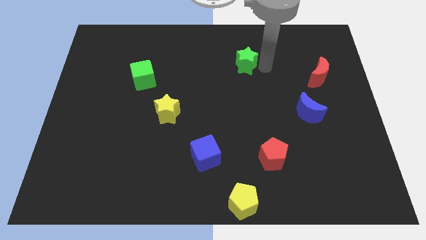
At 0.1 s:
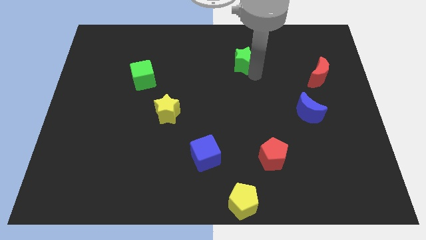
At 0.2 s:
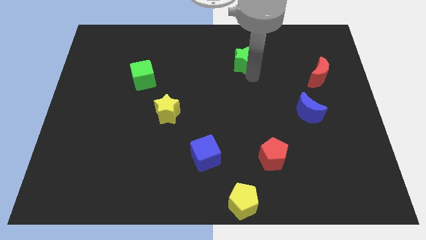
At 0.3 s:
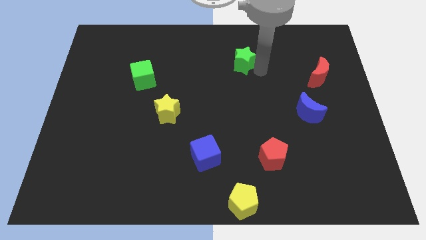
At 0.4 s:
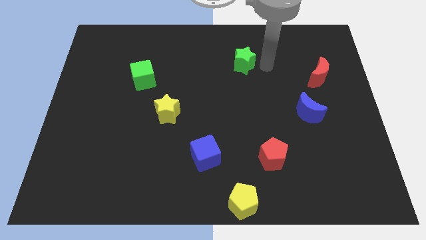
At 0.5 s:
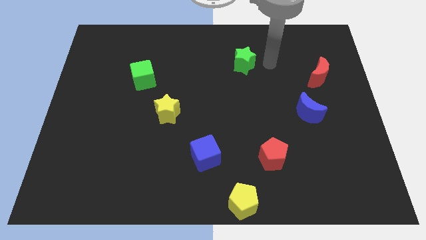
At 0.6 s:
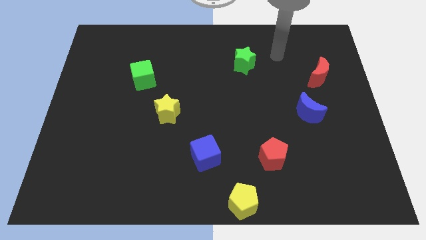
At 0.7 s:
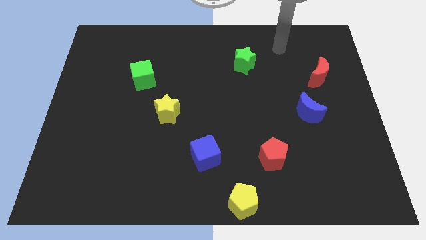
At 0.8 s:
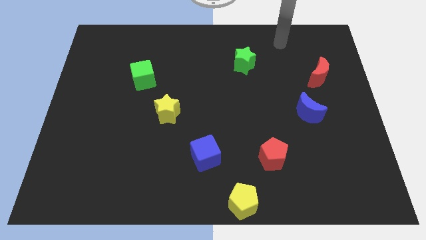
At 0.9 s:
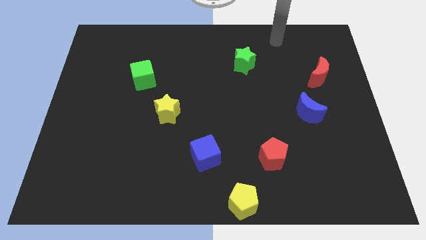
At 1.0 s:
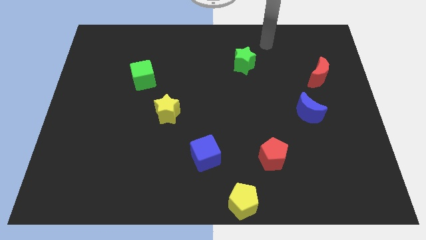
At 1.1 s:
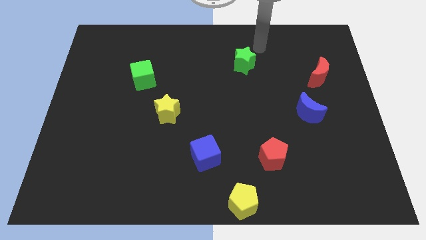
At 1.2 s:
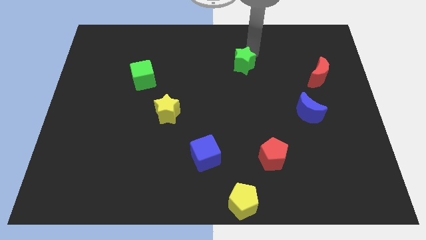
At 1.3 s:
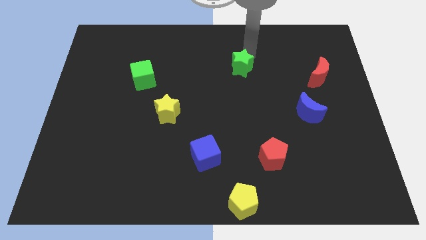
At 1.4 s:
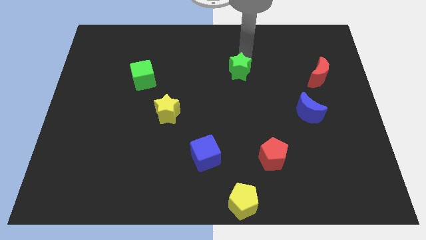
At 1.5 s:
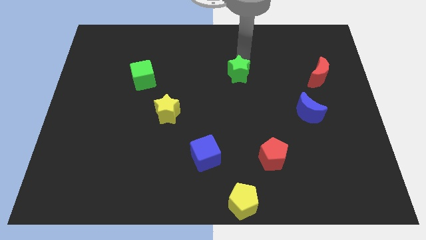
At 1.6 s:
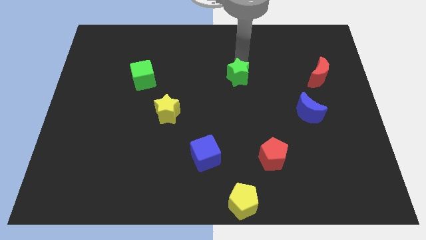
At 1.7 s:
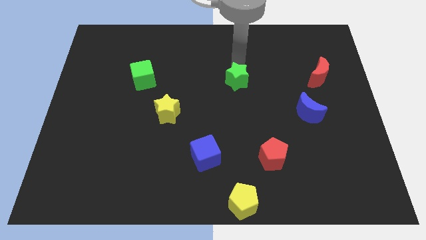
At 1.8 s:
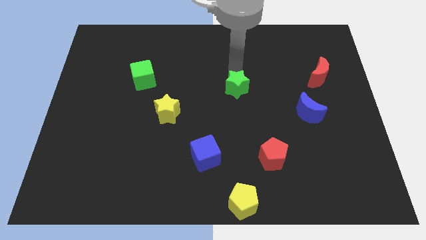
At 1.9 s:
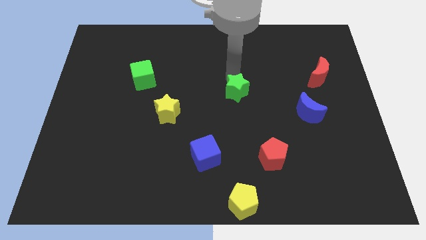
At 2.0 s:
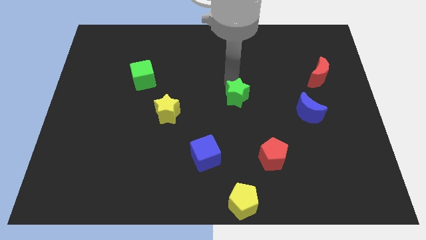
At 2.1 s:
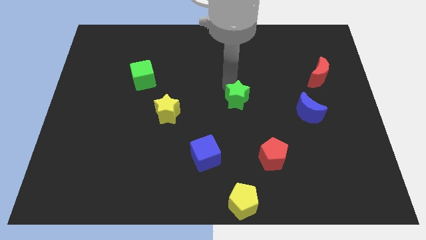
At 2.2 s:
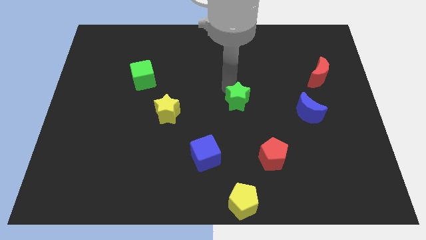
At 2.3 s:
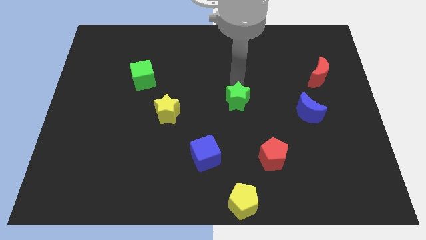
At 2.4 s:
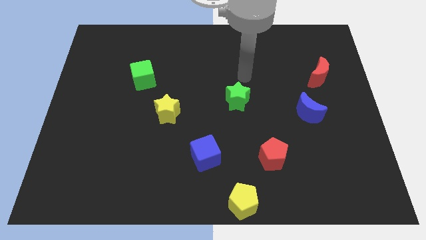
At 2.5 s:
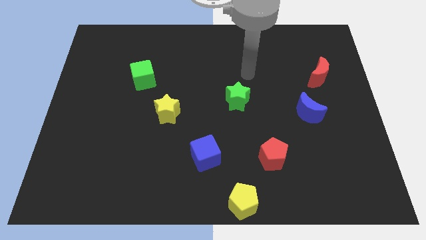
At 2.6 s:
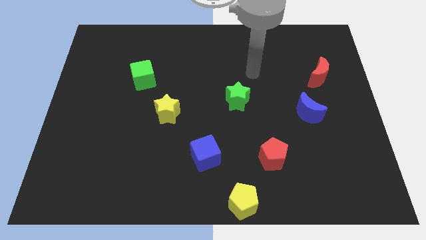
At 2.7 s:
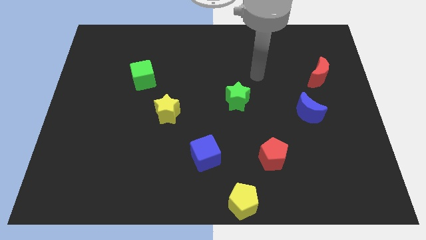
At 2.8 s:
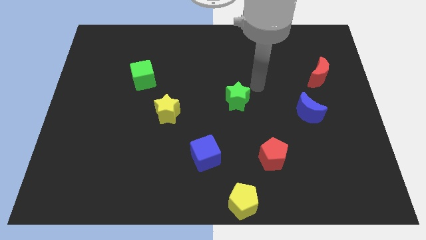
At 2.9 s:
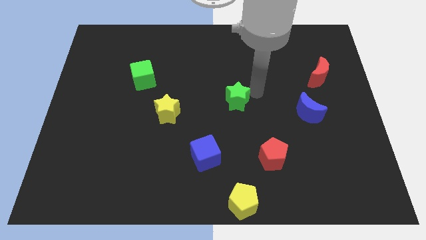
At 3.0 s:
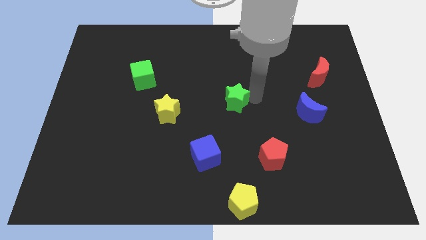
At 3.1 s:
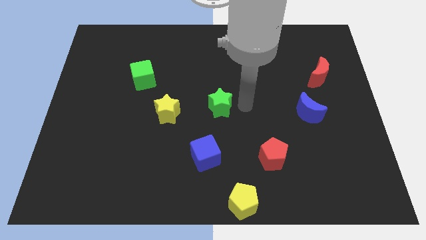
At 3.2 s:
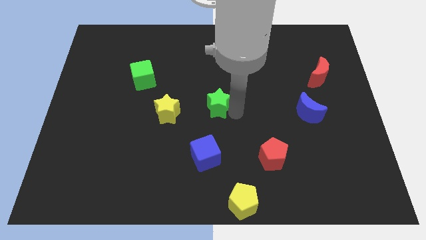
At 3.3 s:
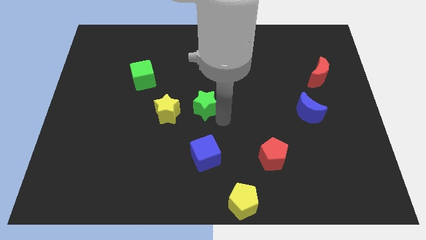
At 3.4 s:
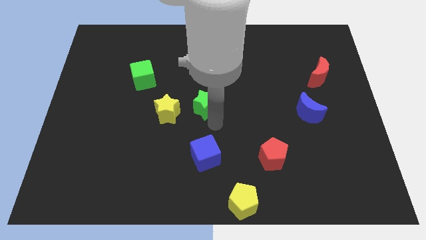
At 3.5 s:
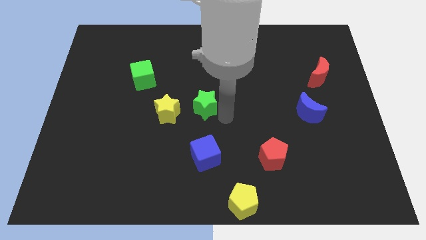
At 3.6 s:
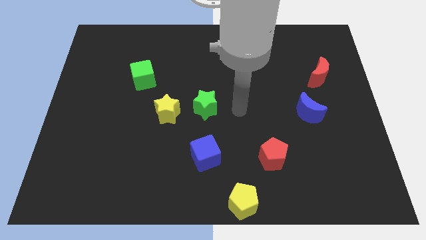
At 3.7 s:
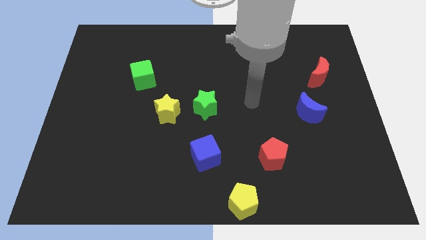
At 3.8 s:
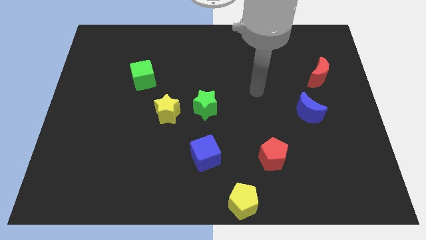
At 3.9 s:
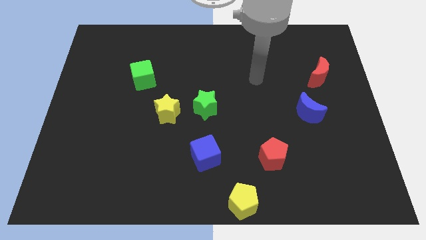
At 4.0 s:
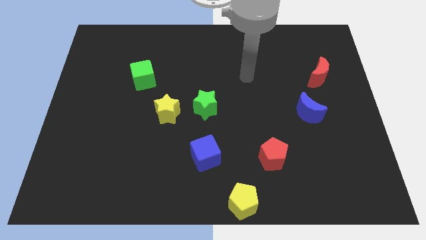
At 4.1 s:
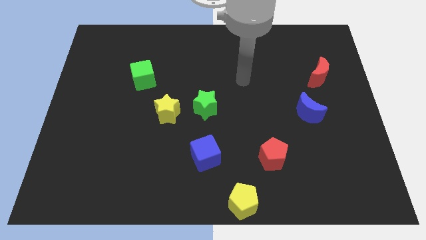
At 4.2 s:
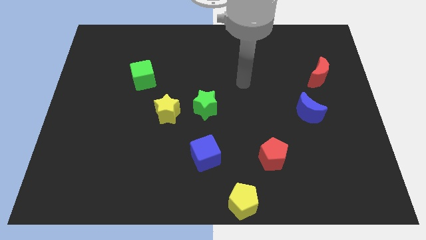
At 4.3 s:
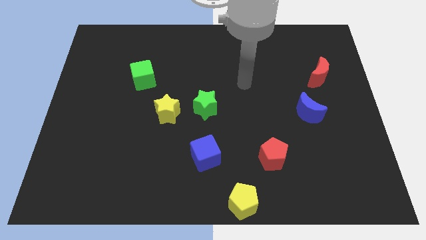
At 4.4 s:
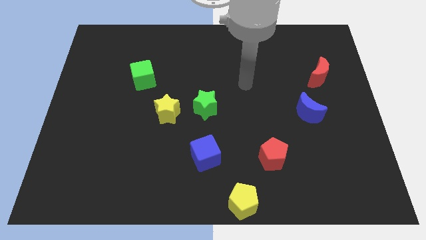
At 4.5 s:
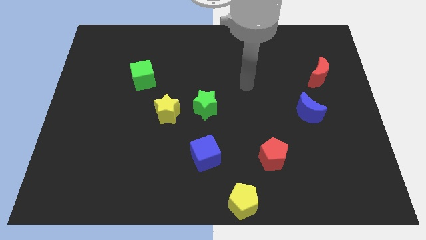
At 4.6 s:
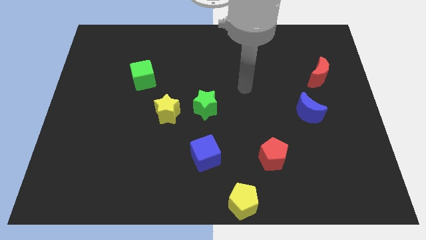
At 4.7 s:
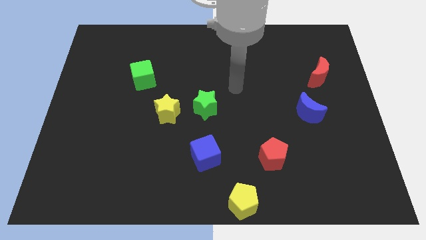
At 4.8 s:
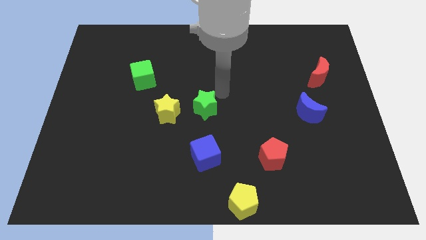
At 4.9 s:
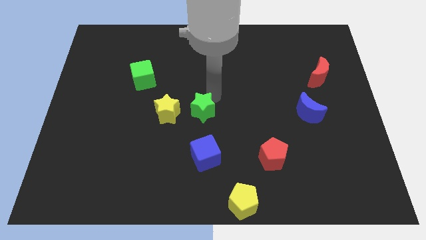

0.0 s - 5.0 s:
place the green star vertically above the blue cube in the center

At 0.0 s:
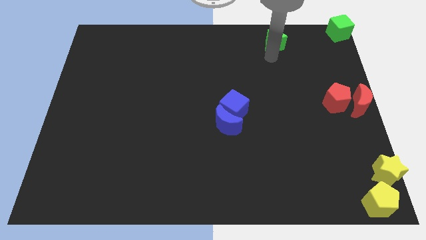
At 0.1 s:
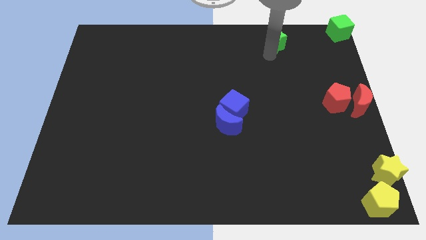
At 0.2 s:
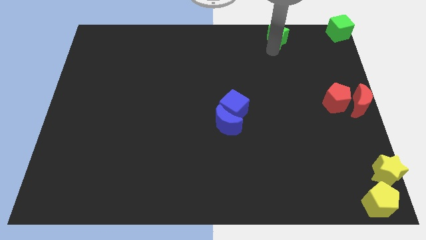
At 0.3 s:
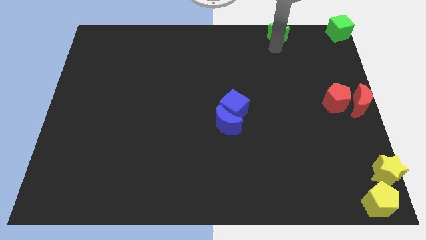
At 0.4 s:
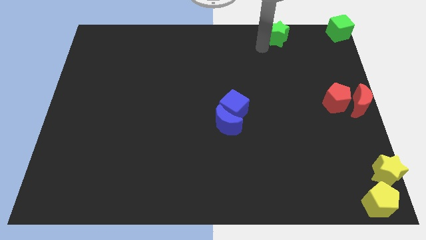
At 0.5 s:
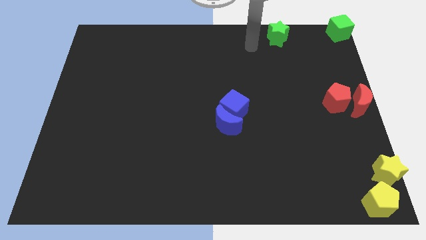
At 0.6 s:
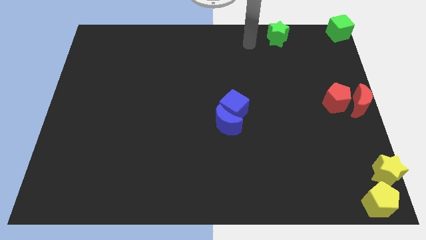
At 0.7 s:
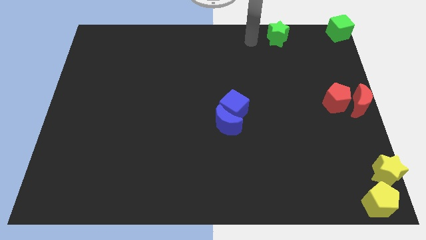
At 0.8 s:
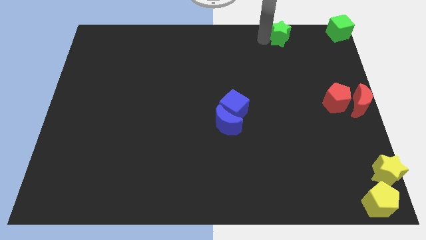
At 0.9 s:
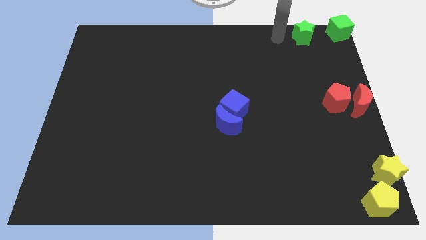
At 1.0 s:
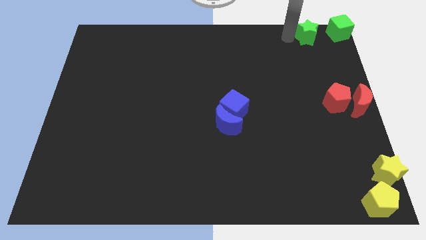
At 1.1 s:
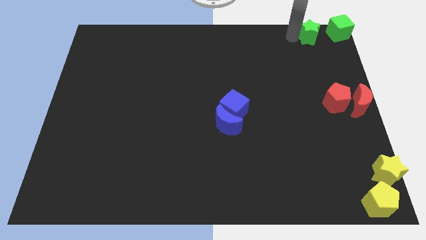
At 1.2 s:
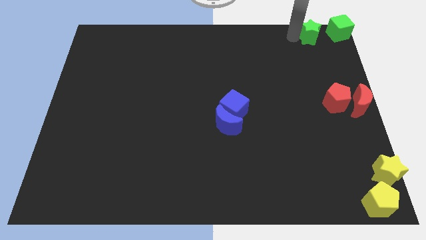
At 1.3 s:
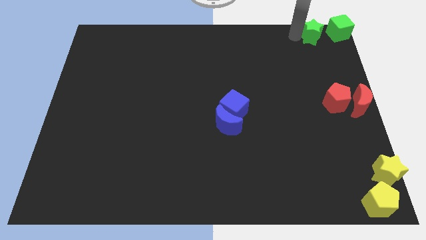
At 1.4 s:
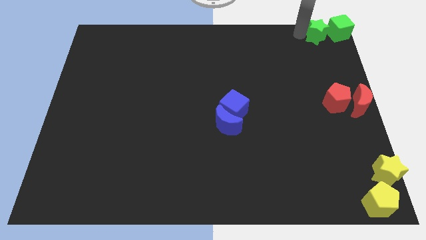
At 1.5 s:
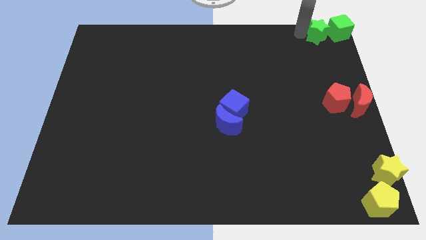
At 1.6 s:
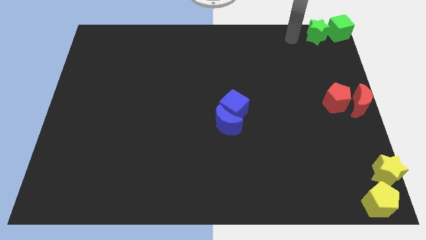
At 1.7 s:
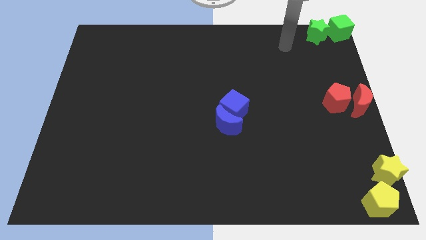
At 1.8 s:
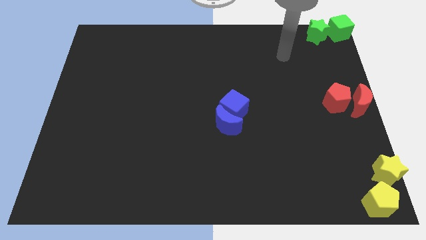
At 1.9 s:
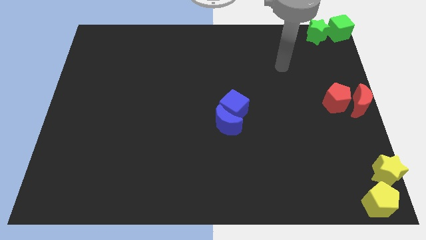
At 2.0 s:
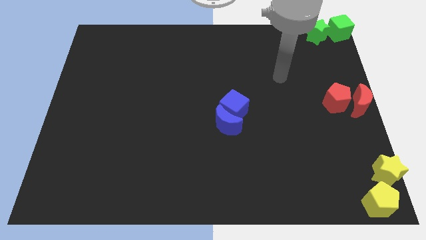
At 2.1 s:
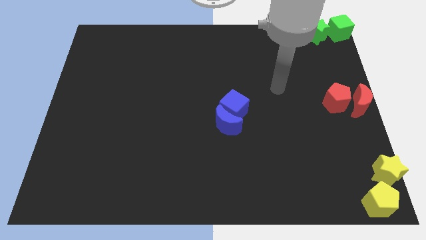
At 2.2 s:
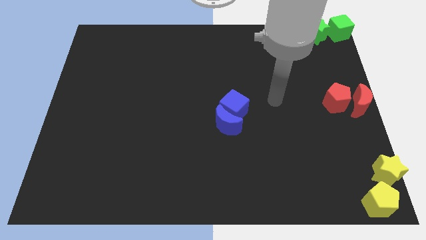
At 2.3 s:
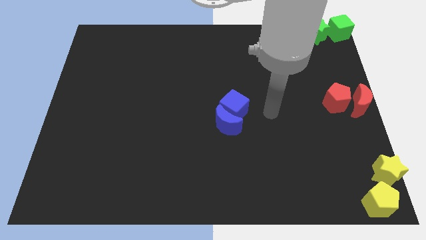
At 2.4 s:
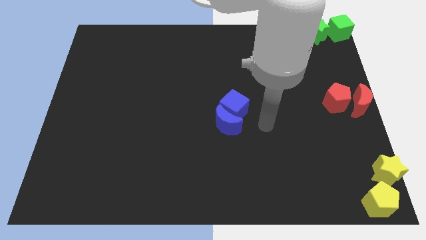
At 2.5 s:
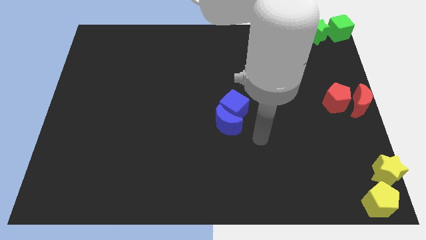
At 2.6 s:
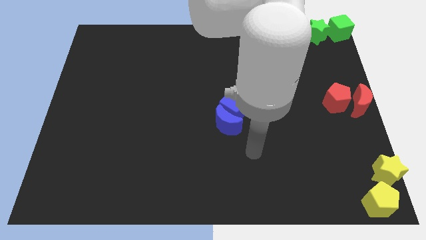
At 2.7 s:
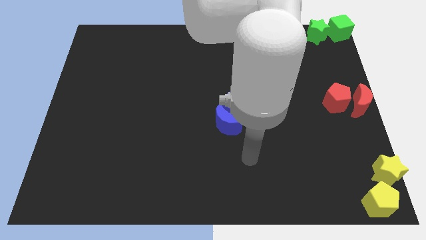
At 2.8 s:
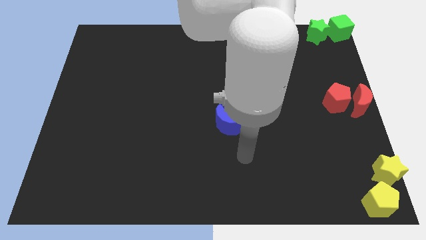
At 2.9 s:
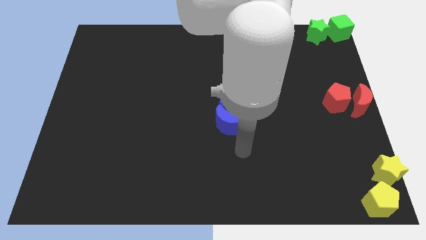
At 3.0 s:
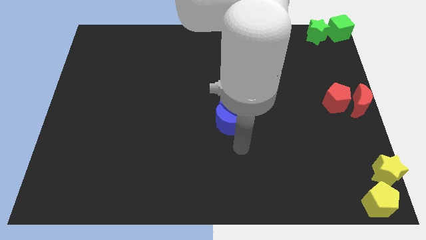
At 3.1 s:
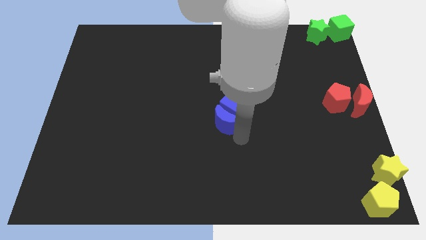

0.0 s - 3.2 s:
push the green star into the green cube

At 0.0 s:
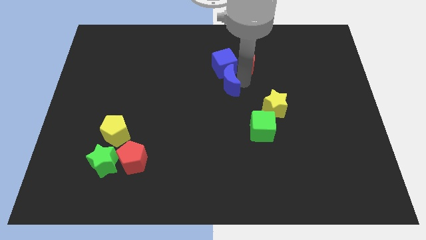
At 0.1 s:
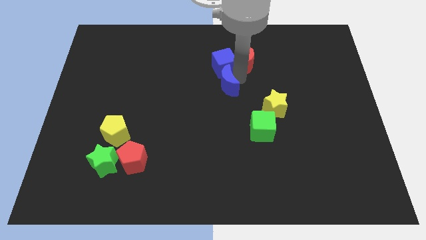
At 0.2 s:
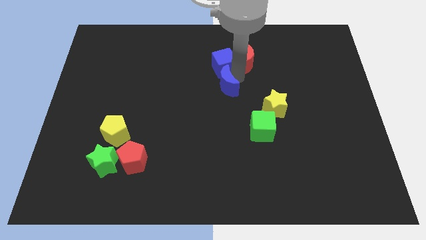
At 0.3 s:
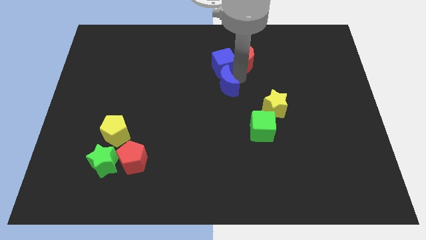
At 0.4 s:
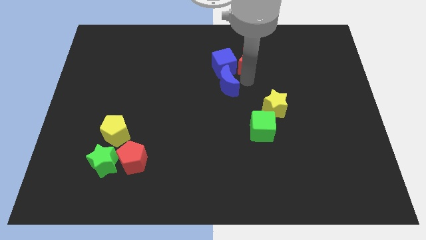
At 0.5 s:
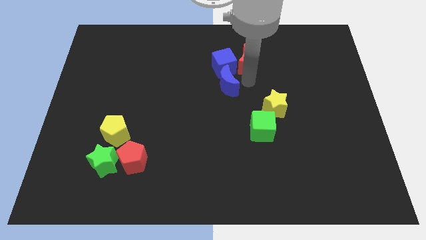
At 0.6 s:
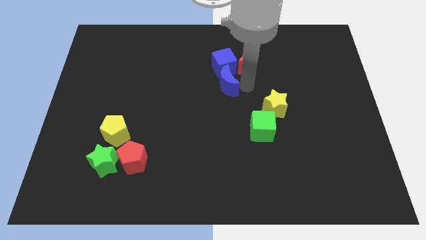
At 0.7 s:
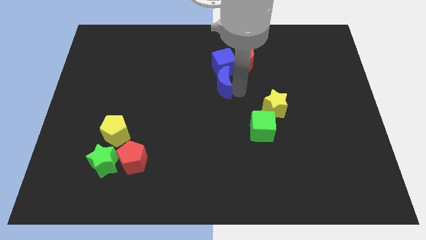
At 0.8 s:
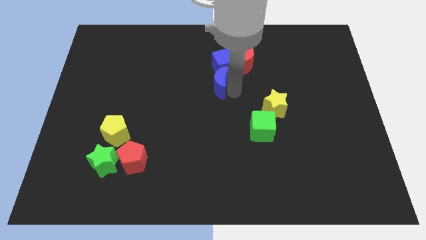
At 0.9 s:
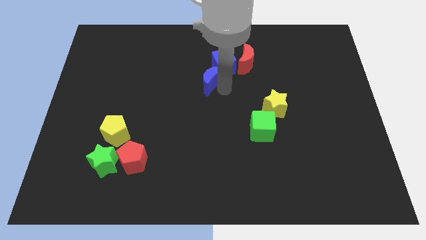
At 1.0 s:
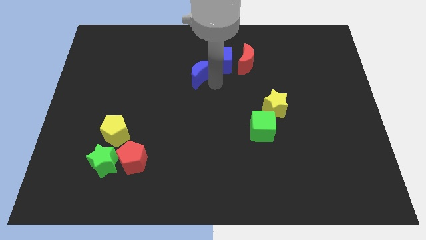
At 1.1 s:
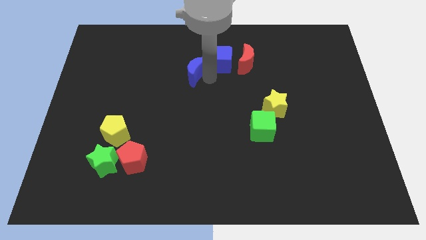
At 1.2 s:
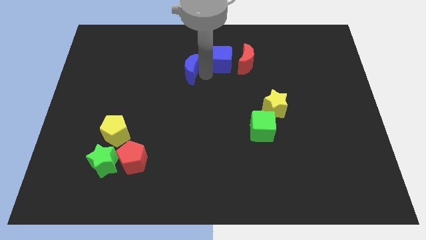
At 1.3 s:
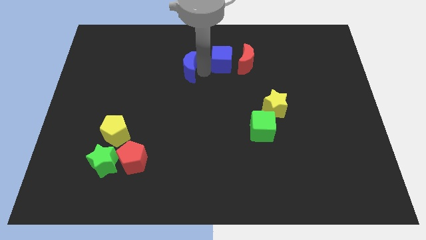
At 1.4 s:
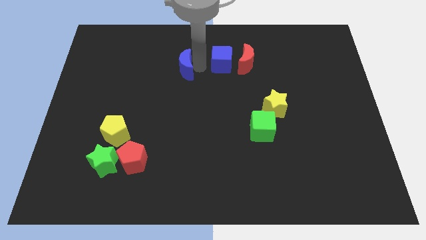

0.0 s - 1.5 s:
move the blue crescent away from the blue cube
